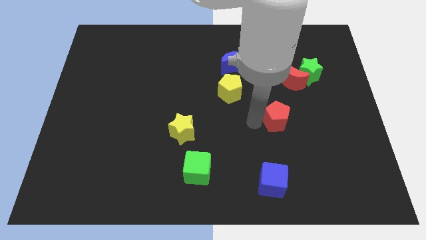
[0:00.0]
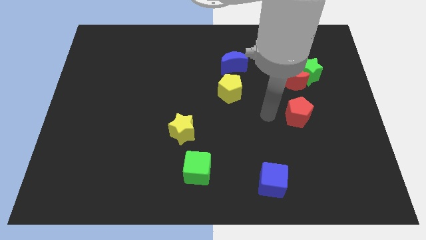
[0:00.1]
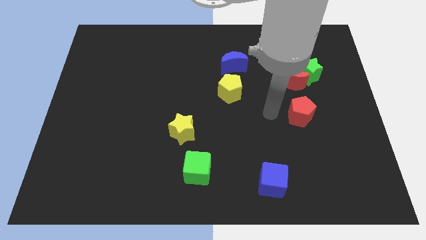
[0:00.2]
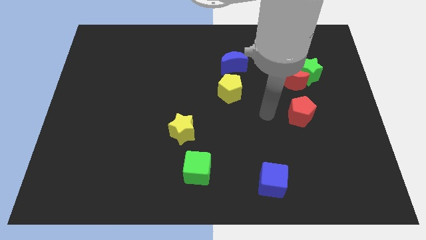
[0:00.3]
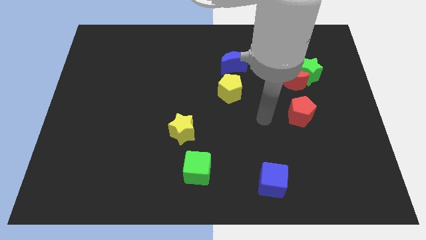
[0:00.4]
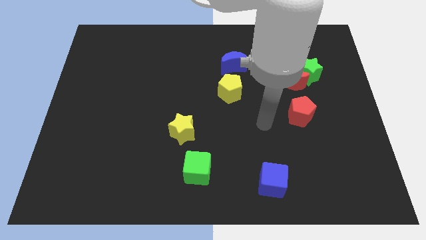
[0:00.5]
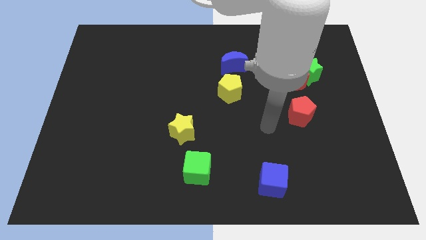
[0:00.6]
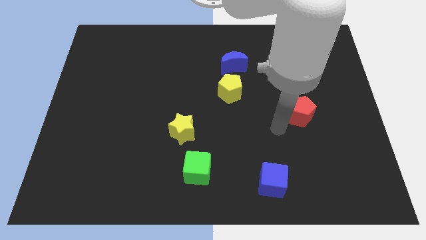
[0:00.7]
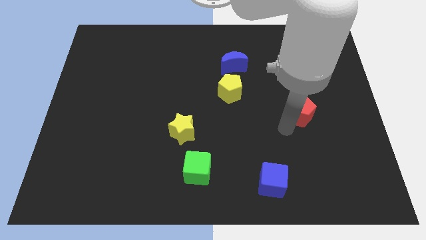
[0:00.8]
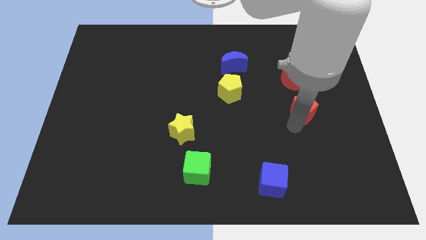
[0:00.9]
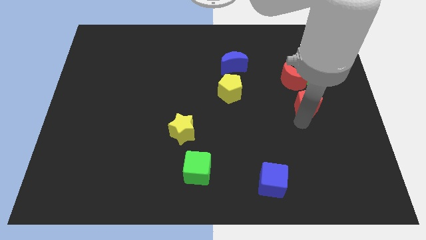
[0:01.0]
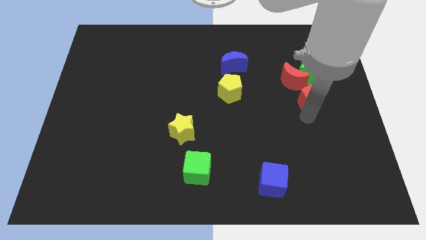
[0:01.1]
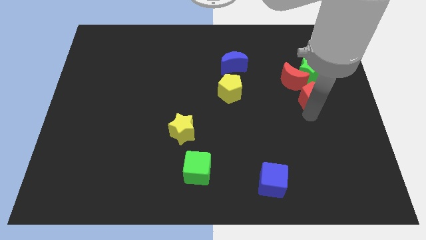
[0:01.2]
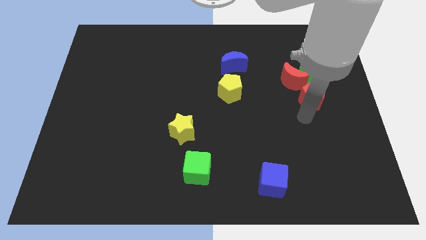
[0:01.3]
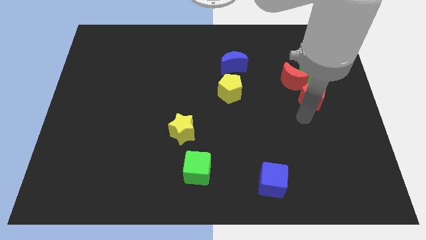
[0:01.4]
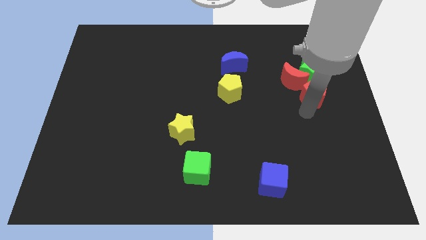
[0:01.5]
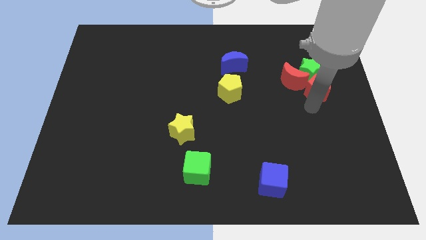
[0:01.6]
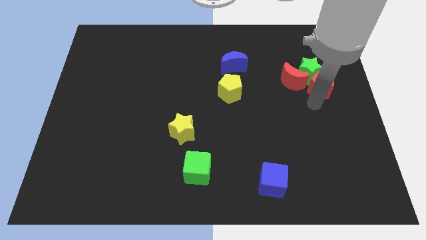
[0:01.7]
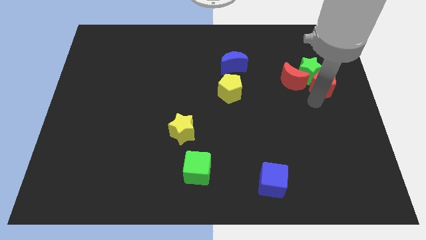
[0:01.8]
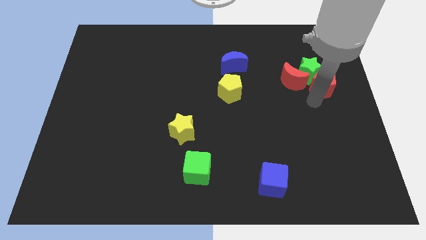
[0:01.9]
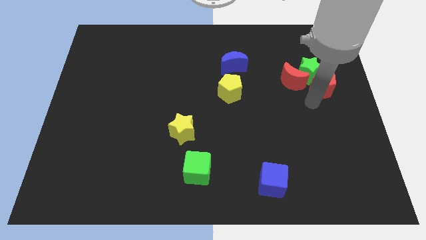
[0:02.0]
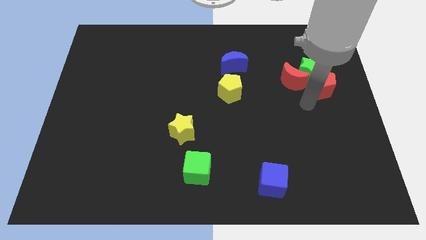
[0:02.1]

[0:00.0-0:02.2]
push red pentagon towards the green star

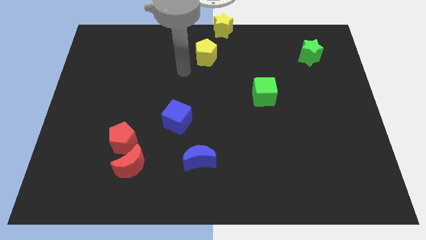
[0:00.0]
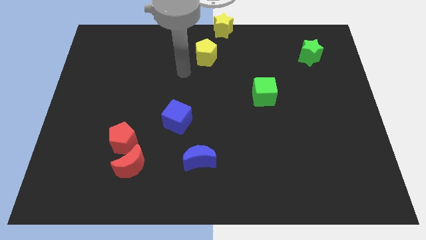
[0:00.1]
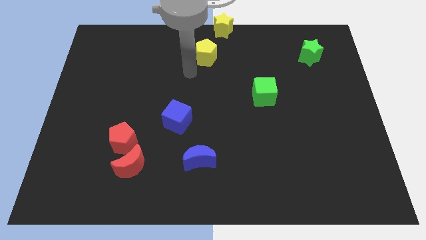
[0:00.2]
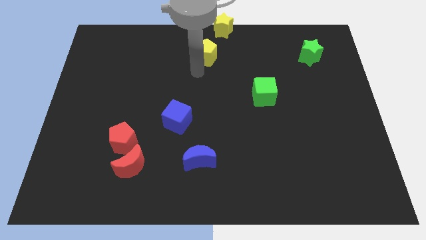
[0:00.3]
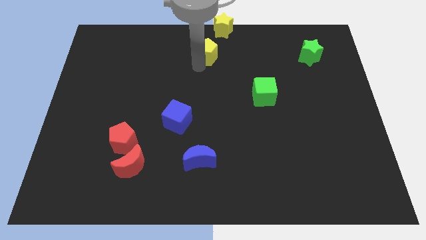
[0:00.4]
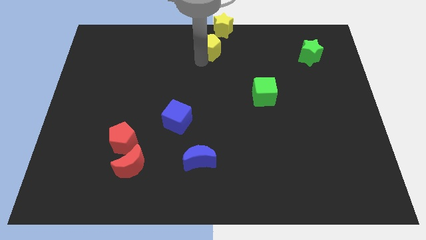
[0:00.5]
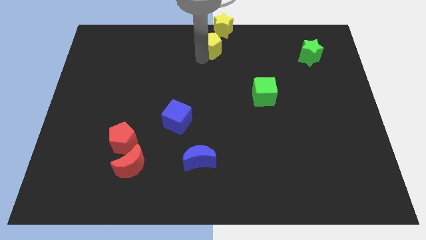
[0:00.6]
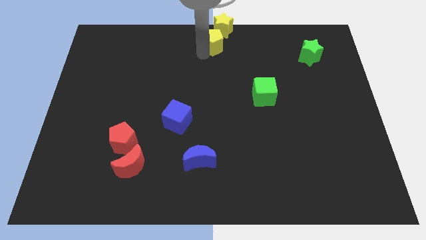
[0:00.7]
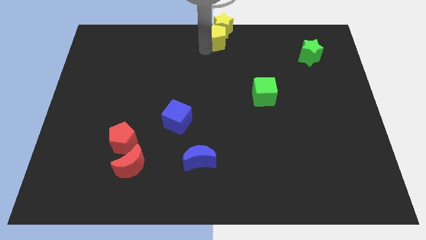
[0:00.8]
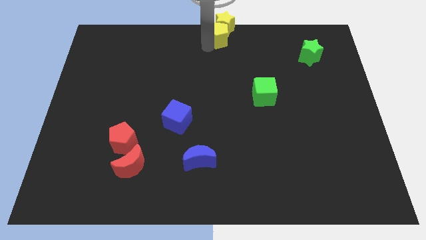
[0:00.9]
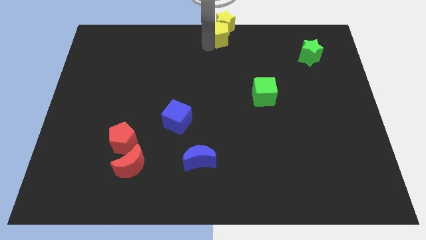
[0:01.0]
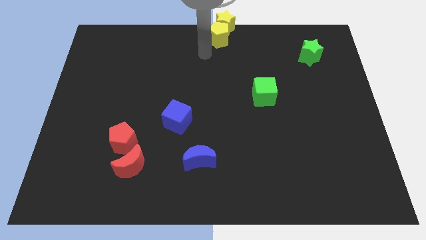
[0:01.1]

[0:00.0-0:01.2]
move the yellow pentagon into the yellow star

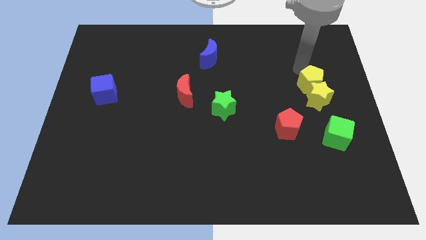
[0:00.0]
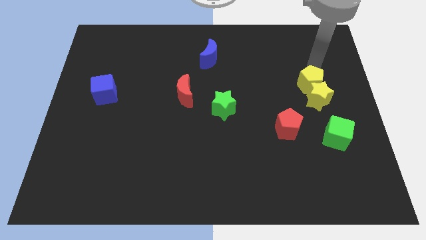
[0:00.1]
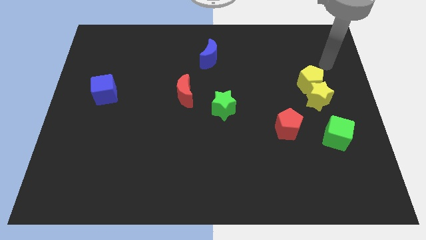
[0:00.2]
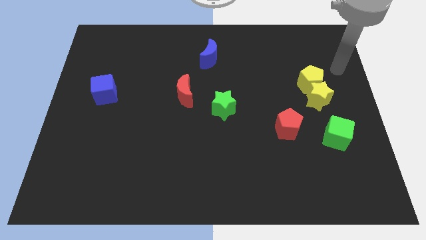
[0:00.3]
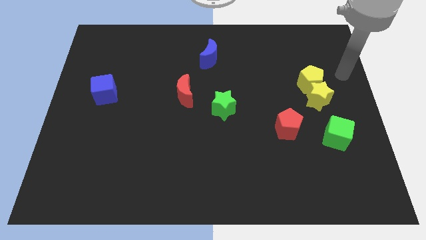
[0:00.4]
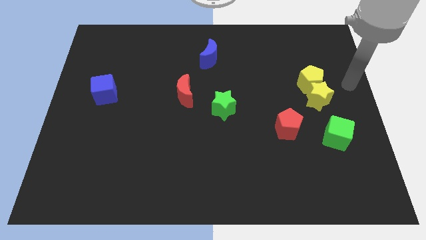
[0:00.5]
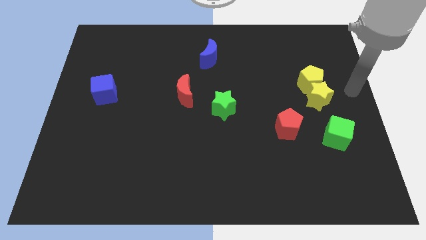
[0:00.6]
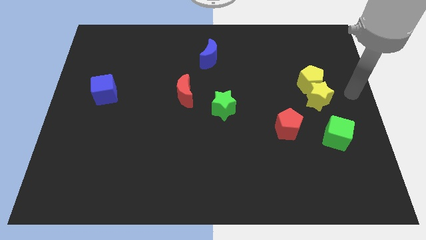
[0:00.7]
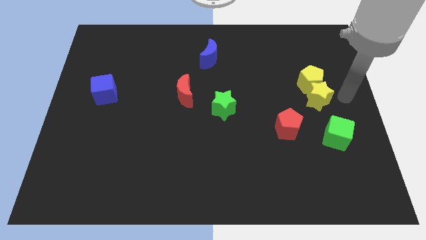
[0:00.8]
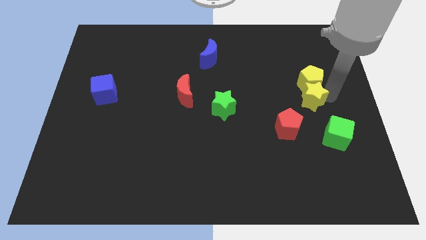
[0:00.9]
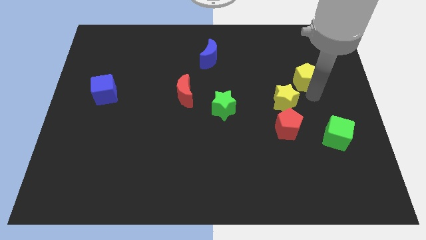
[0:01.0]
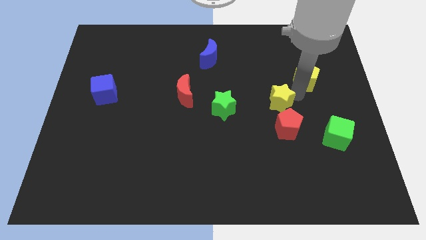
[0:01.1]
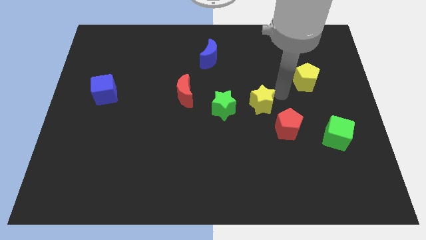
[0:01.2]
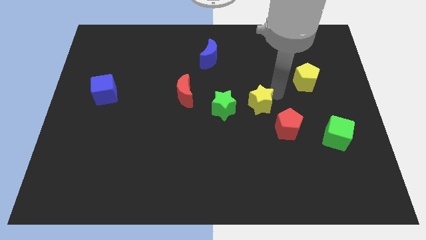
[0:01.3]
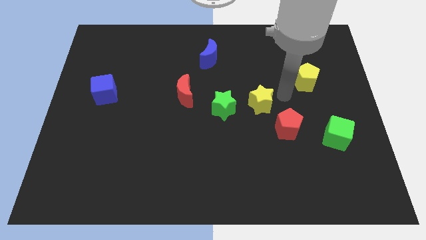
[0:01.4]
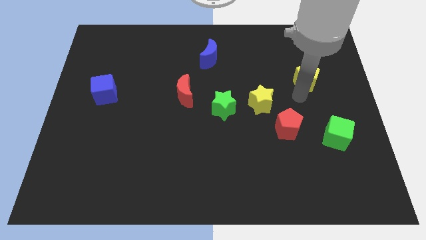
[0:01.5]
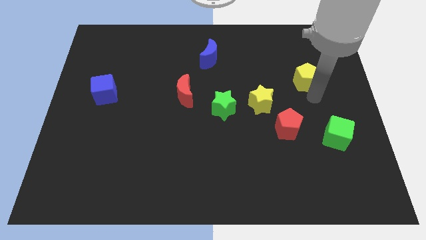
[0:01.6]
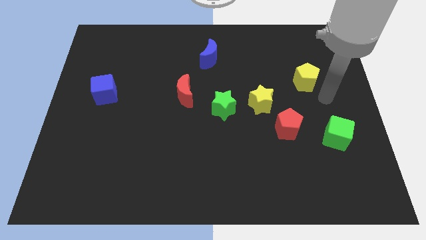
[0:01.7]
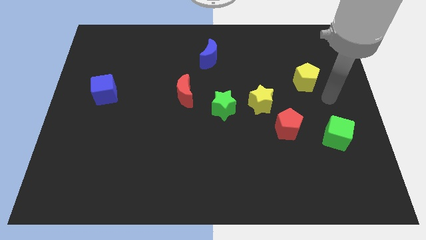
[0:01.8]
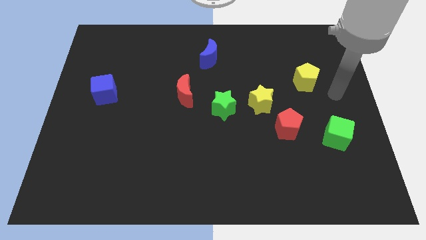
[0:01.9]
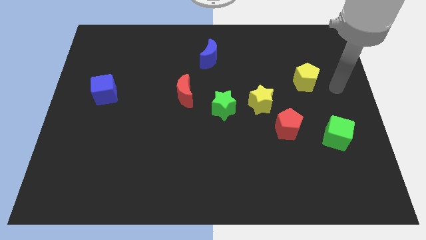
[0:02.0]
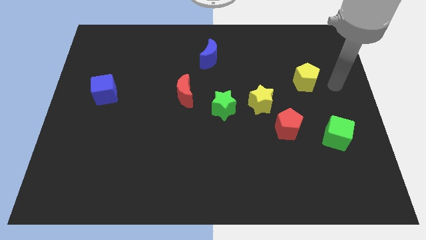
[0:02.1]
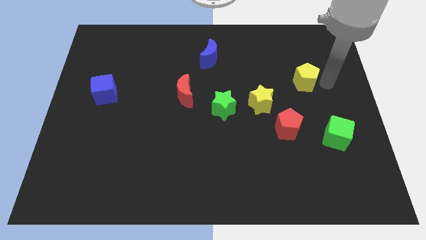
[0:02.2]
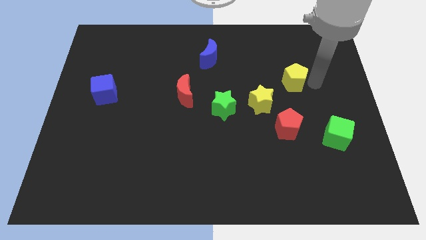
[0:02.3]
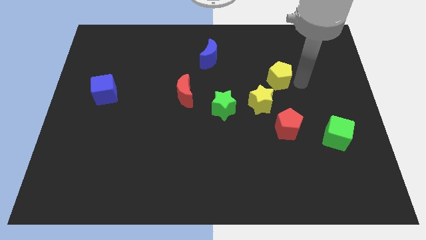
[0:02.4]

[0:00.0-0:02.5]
place the yellow star in between the yellow pentagon and green star

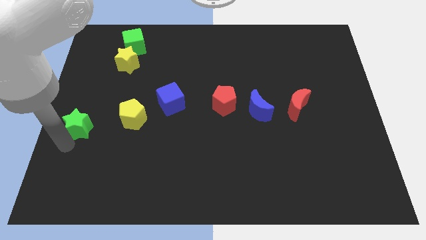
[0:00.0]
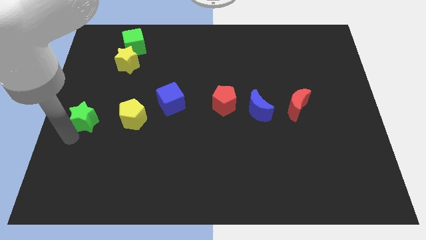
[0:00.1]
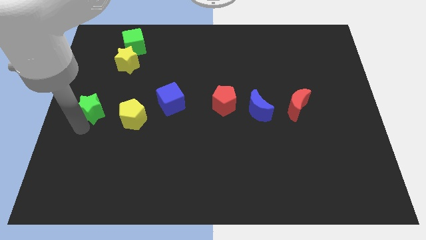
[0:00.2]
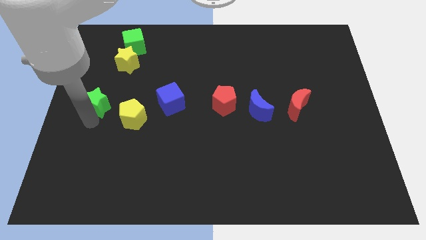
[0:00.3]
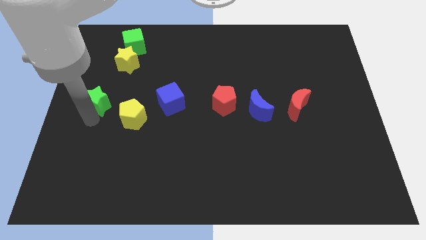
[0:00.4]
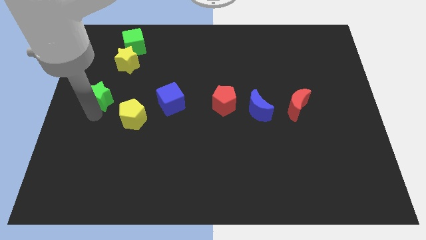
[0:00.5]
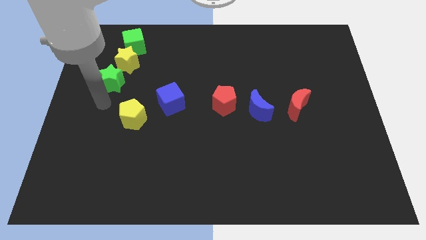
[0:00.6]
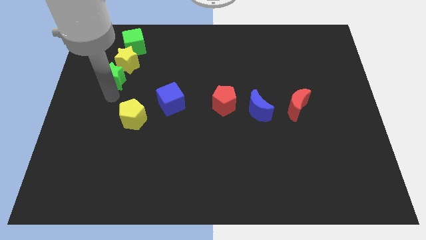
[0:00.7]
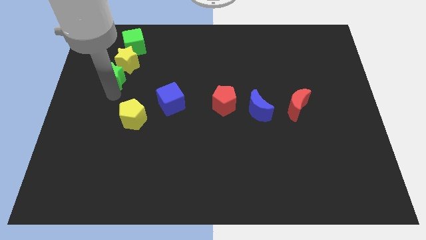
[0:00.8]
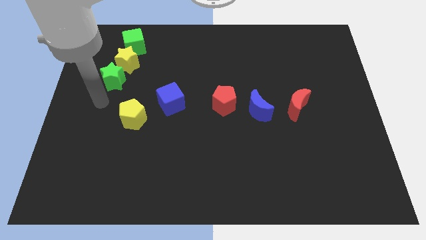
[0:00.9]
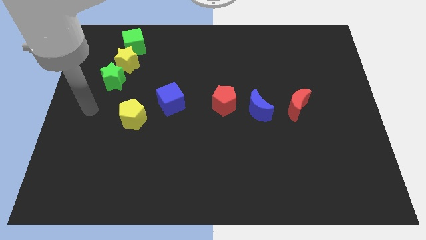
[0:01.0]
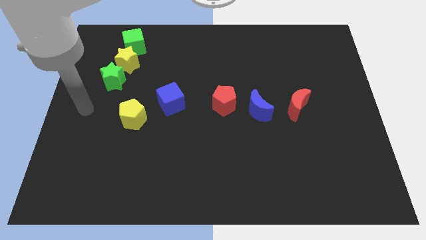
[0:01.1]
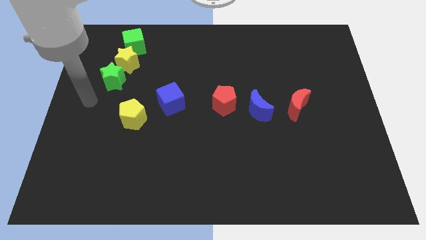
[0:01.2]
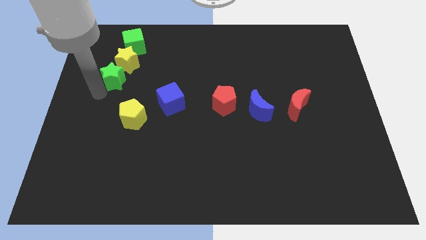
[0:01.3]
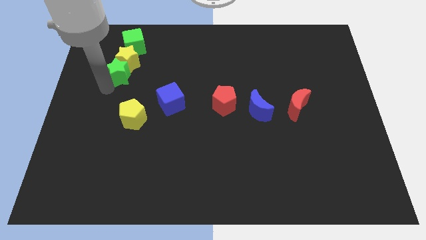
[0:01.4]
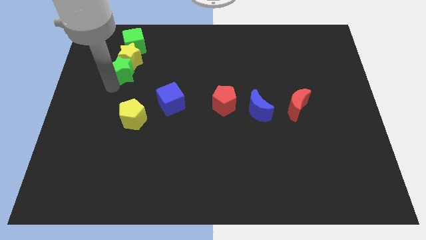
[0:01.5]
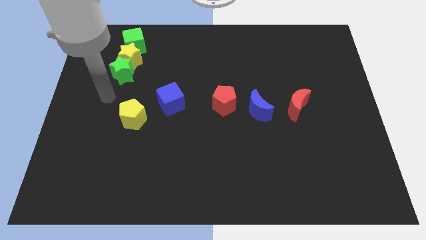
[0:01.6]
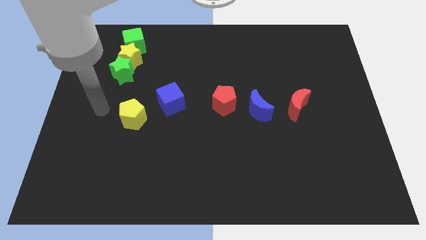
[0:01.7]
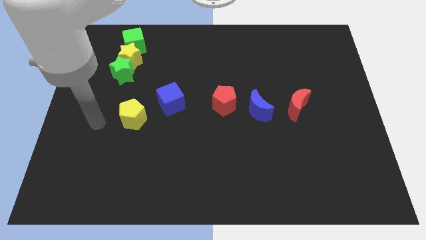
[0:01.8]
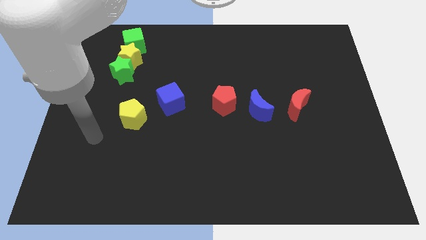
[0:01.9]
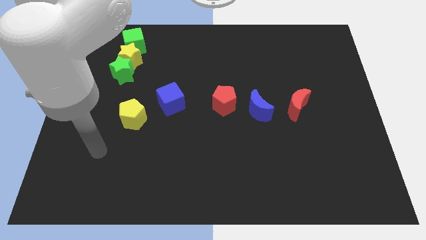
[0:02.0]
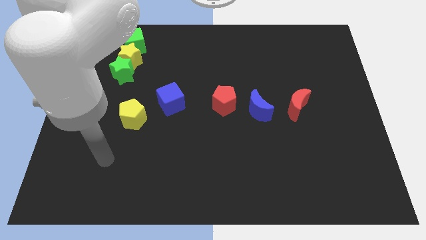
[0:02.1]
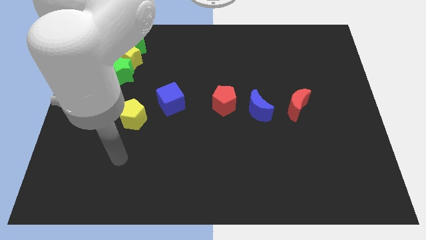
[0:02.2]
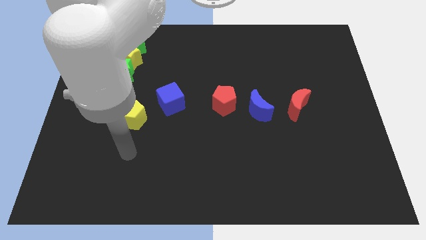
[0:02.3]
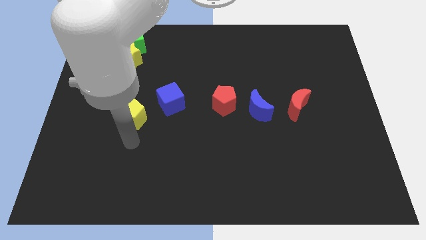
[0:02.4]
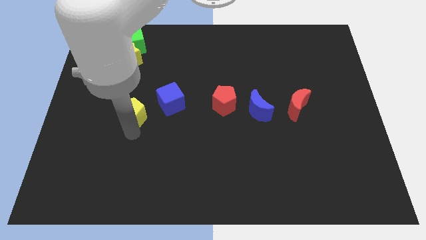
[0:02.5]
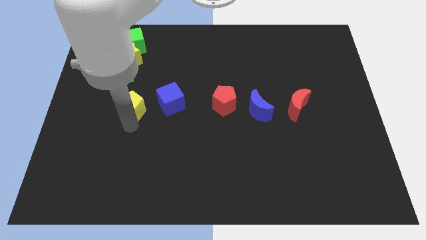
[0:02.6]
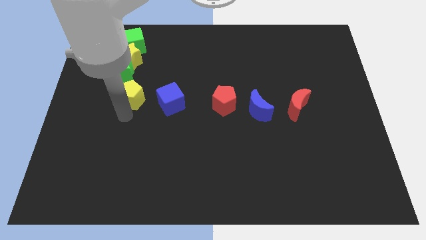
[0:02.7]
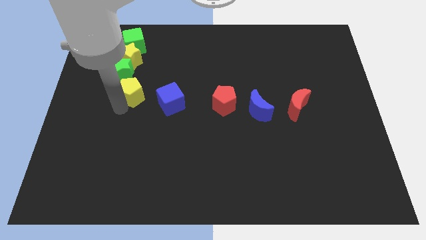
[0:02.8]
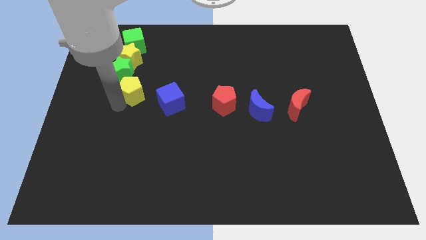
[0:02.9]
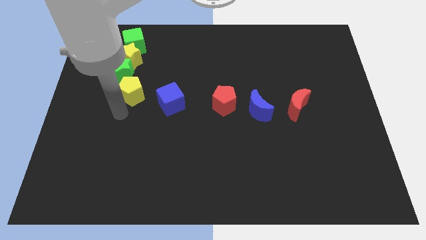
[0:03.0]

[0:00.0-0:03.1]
push yellow pentagon towards green star
